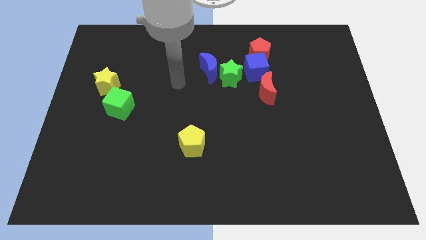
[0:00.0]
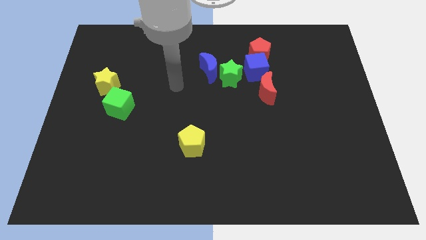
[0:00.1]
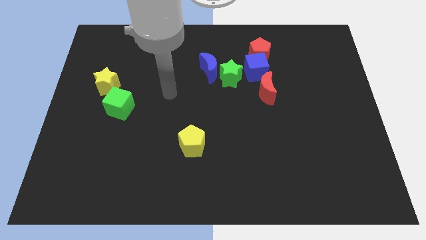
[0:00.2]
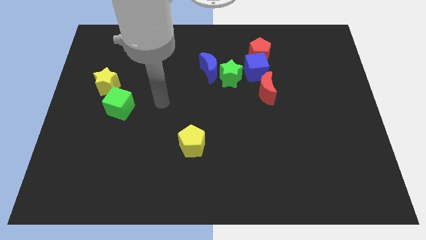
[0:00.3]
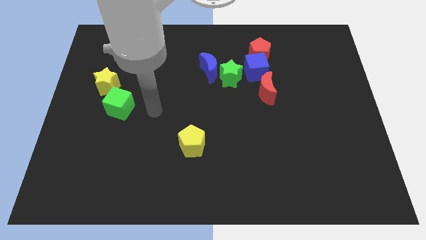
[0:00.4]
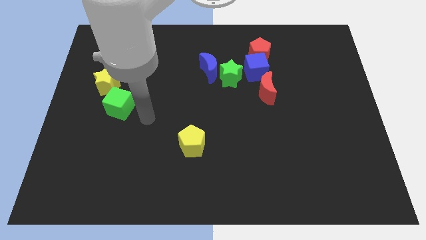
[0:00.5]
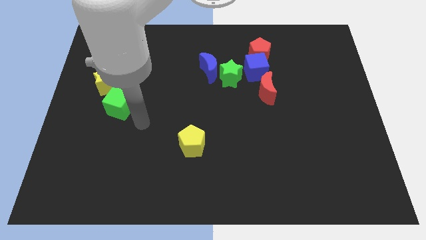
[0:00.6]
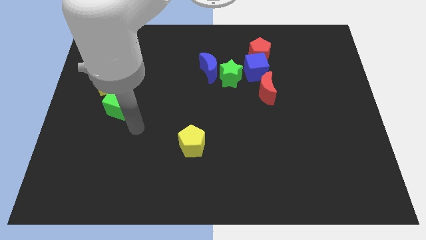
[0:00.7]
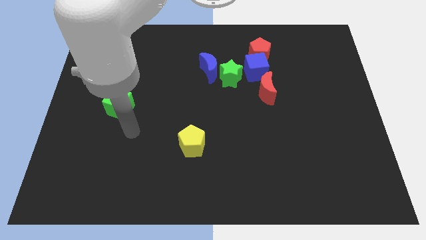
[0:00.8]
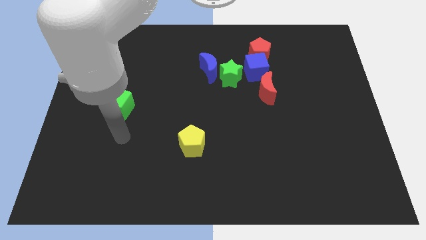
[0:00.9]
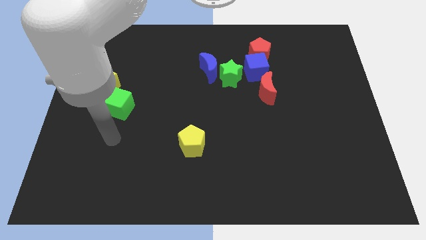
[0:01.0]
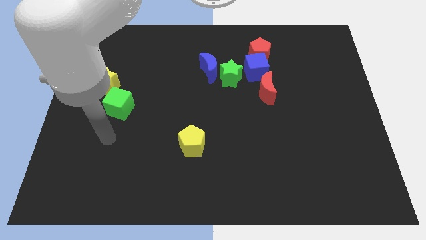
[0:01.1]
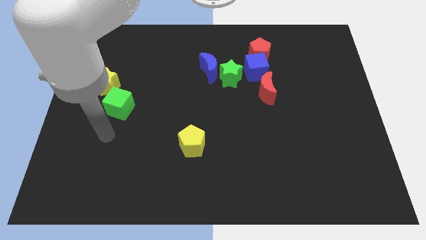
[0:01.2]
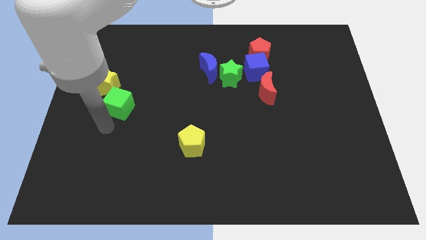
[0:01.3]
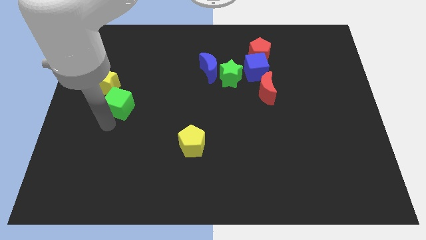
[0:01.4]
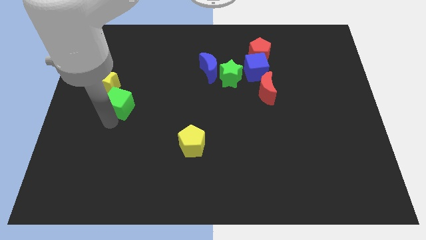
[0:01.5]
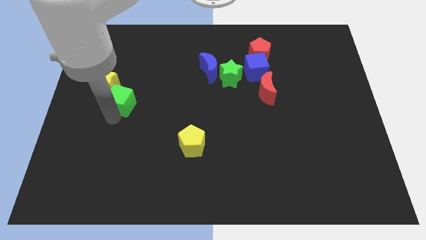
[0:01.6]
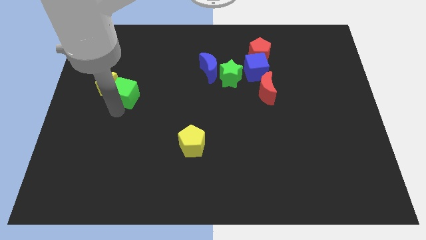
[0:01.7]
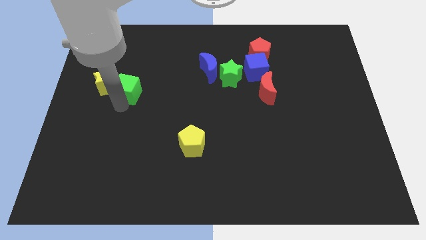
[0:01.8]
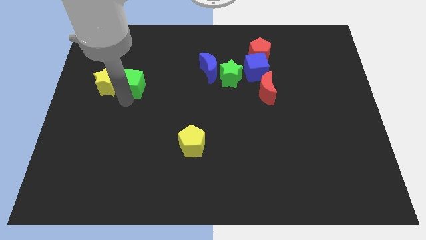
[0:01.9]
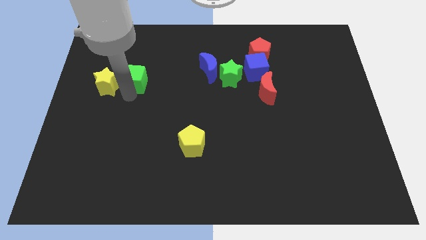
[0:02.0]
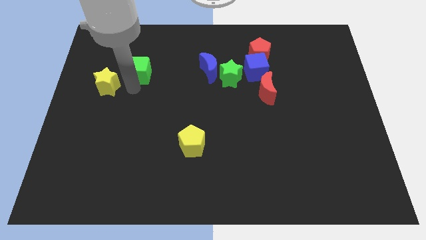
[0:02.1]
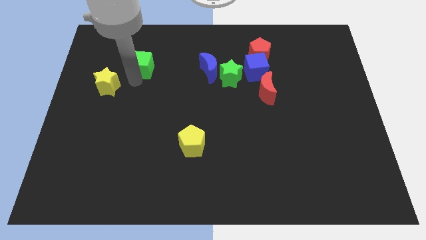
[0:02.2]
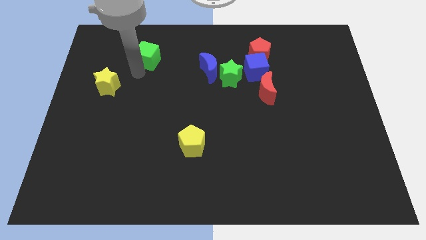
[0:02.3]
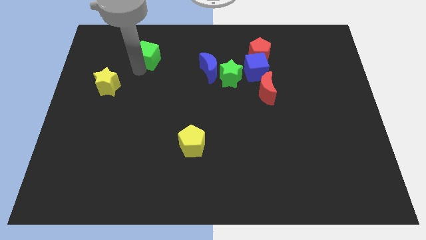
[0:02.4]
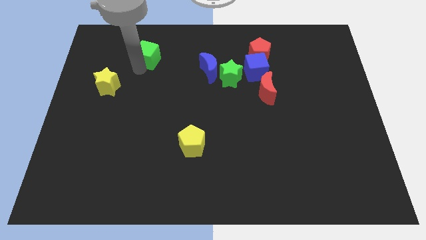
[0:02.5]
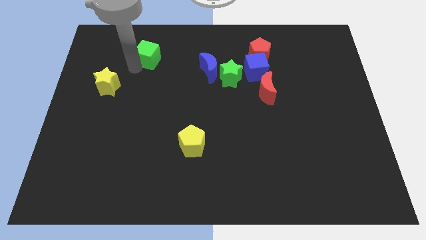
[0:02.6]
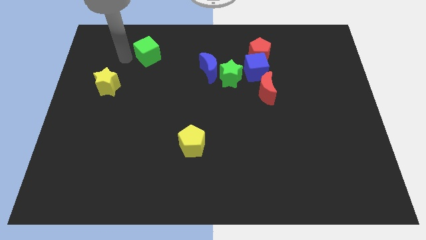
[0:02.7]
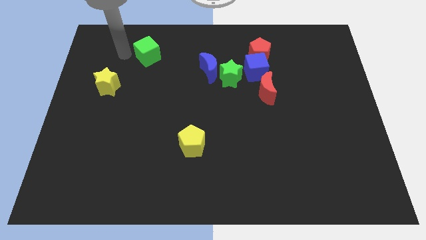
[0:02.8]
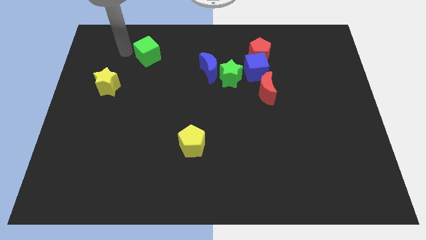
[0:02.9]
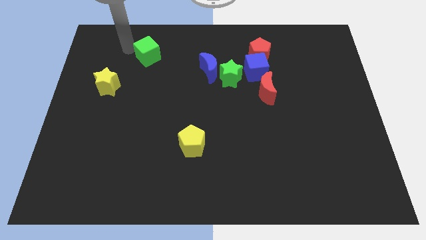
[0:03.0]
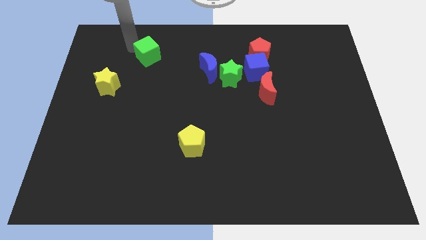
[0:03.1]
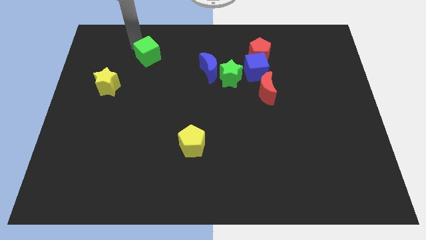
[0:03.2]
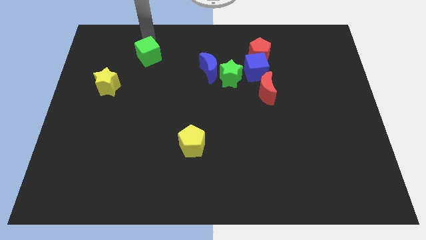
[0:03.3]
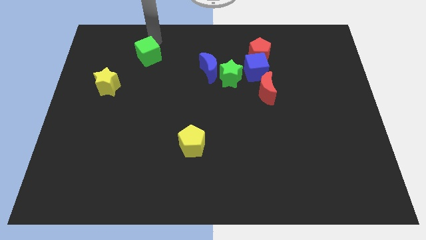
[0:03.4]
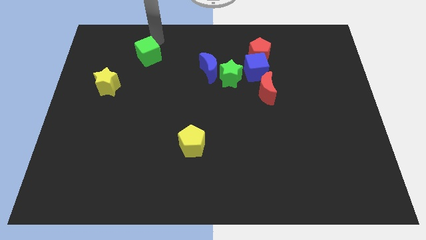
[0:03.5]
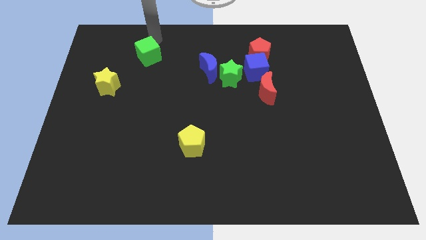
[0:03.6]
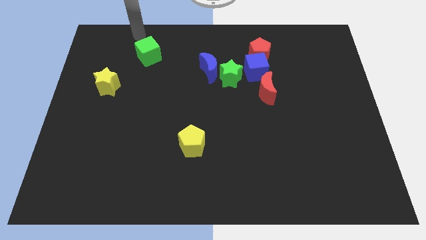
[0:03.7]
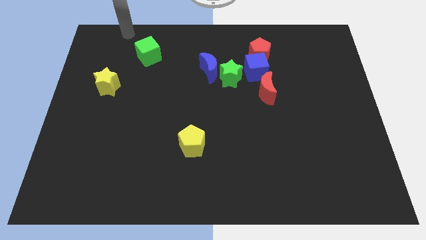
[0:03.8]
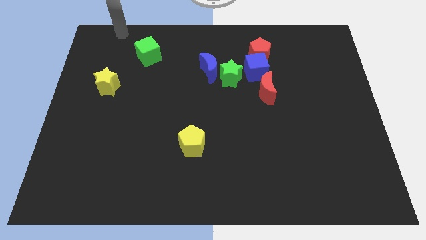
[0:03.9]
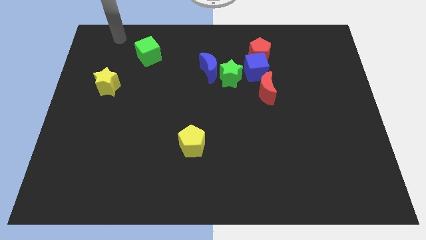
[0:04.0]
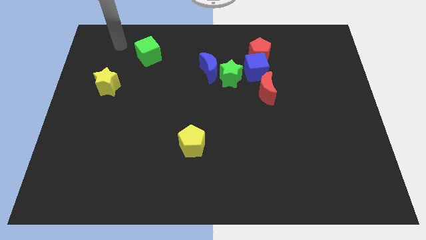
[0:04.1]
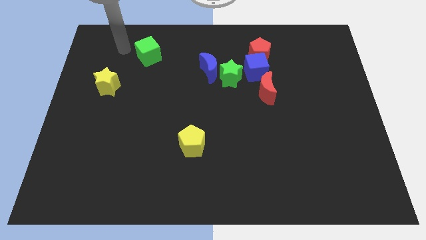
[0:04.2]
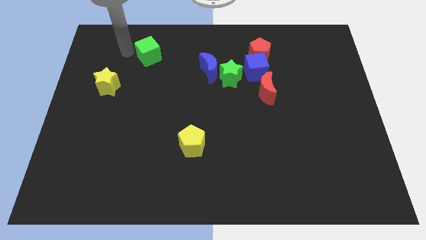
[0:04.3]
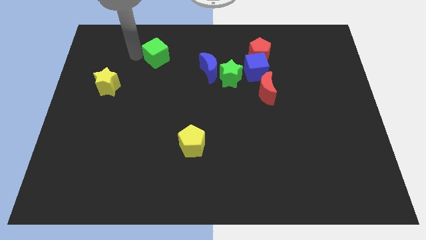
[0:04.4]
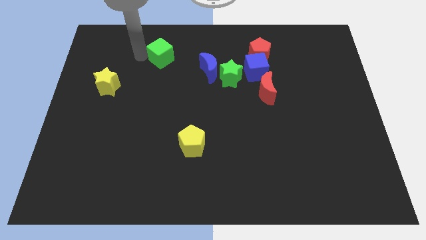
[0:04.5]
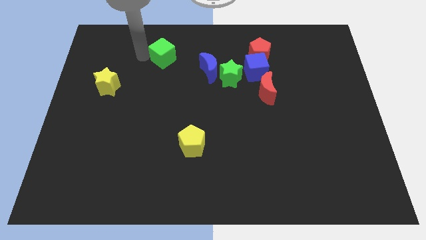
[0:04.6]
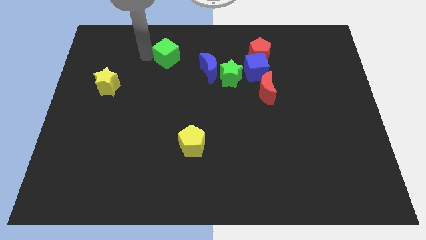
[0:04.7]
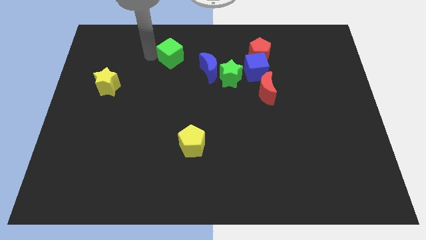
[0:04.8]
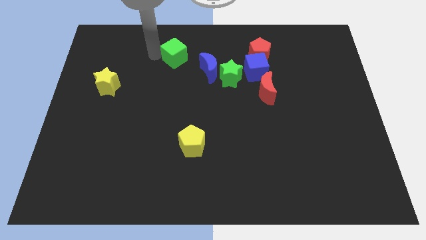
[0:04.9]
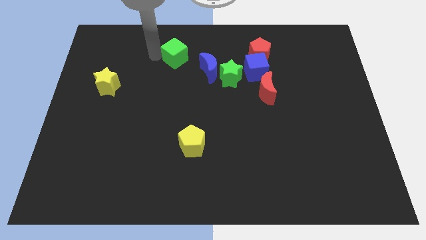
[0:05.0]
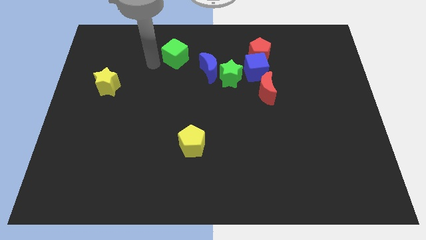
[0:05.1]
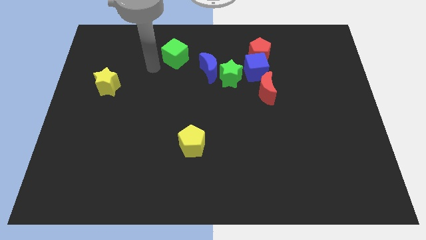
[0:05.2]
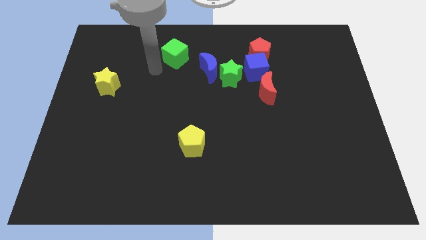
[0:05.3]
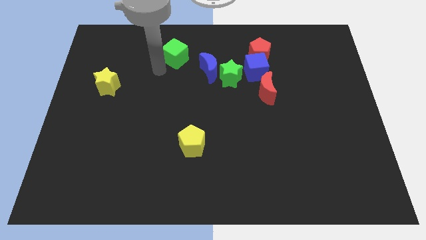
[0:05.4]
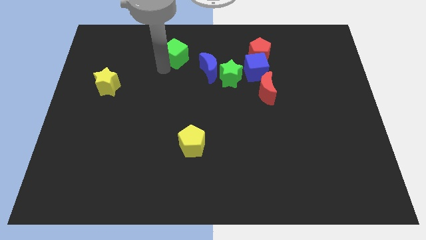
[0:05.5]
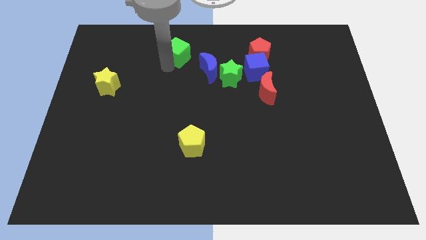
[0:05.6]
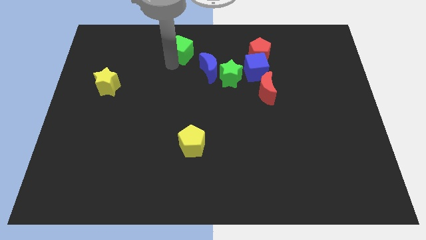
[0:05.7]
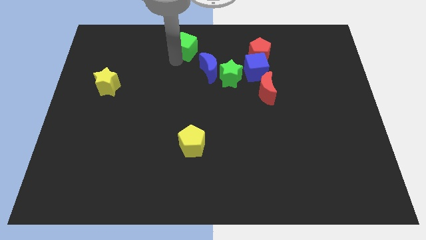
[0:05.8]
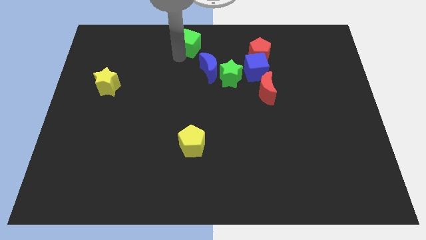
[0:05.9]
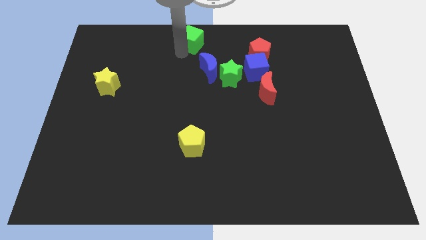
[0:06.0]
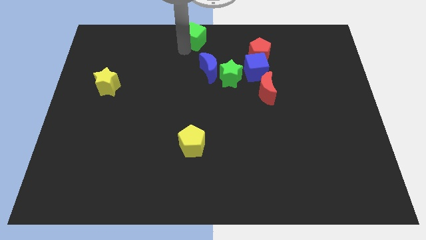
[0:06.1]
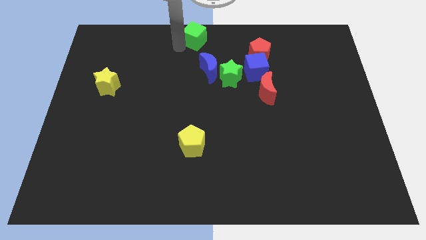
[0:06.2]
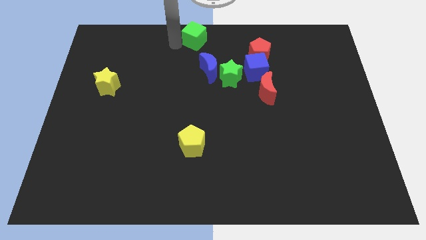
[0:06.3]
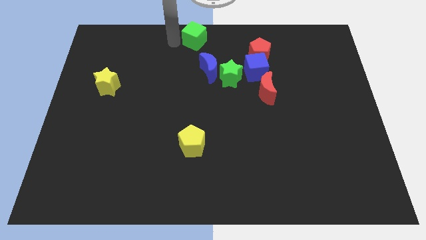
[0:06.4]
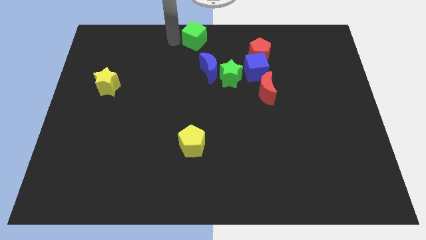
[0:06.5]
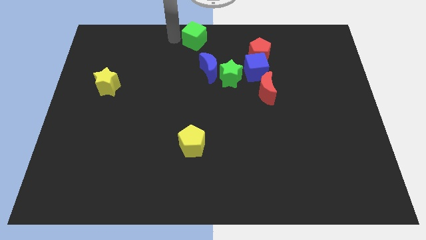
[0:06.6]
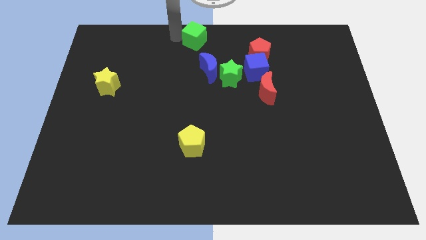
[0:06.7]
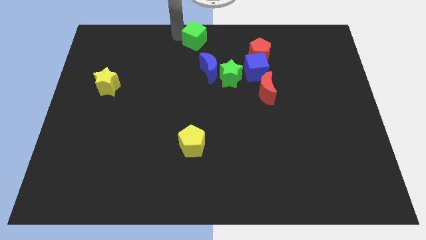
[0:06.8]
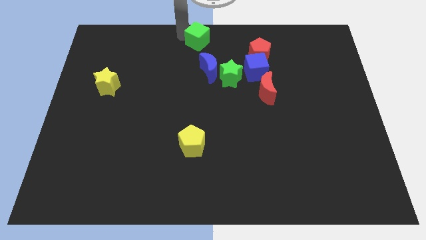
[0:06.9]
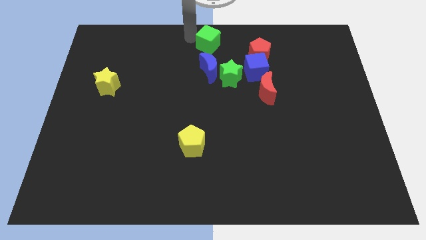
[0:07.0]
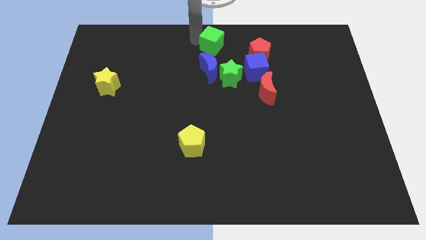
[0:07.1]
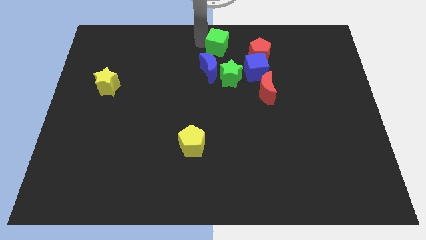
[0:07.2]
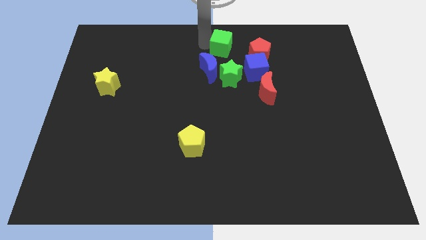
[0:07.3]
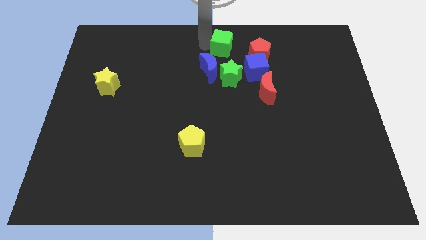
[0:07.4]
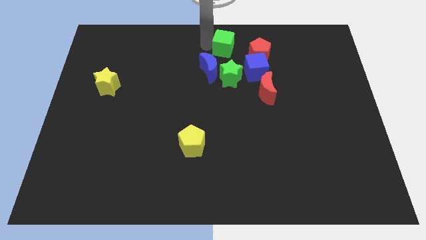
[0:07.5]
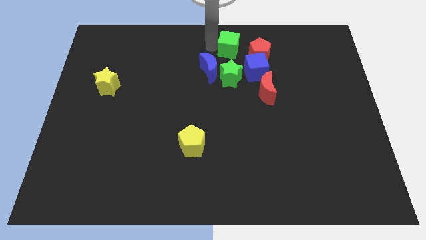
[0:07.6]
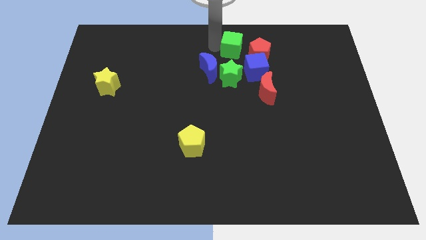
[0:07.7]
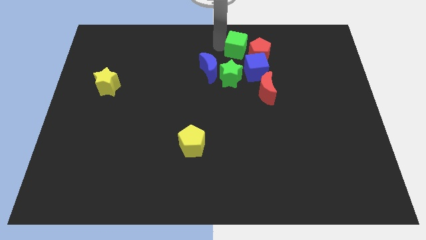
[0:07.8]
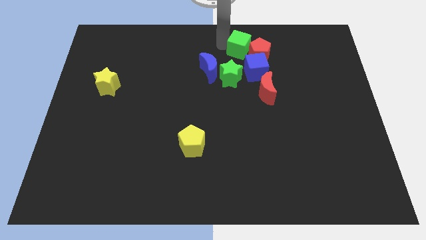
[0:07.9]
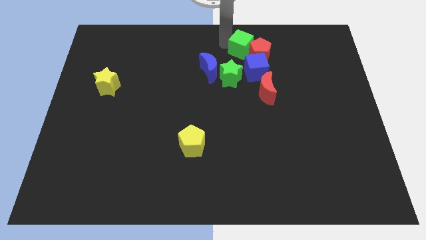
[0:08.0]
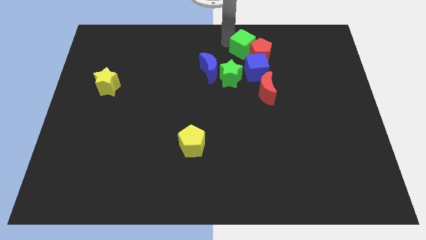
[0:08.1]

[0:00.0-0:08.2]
push the green cube to the red pentagon
